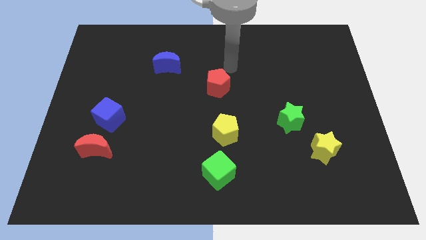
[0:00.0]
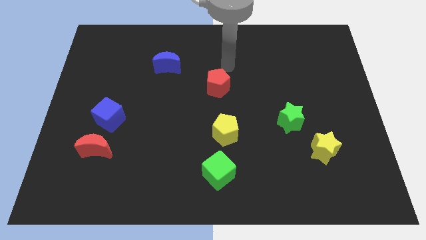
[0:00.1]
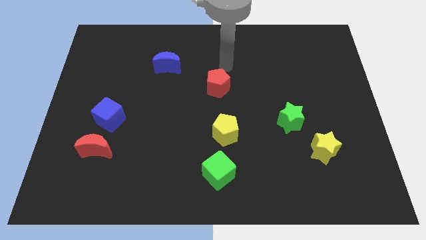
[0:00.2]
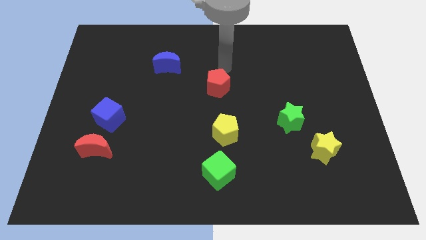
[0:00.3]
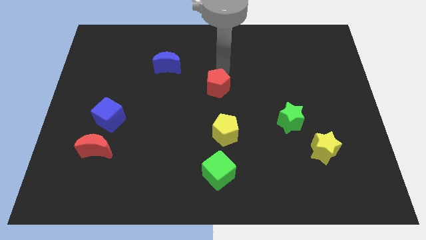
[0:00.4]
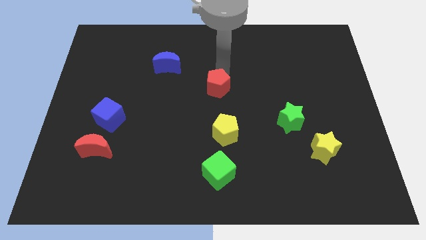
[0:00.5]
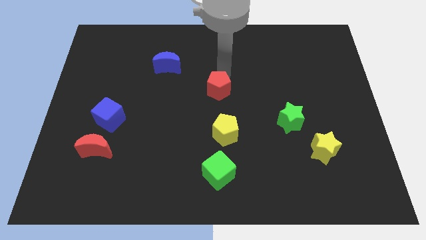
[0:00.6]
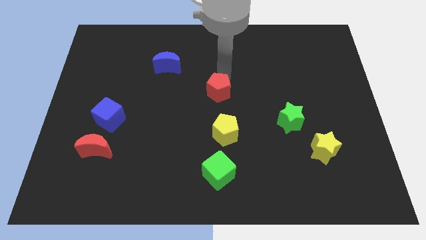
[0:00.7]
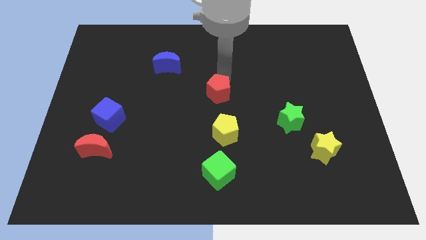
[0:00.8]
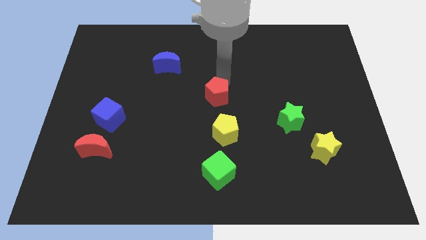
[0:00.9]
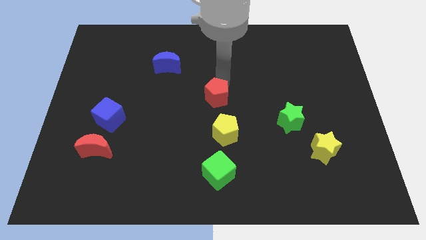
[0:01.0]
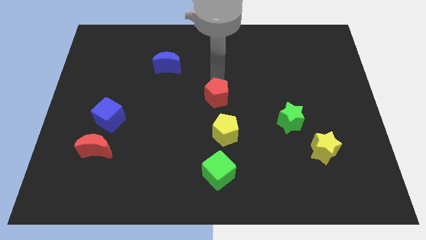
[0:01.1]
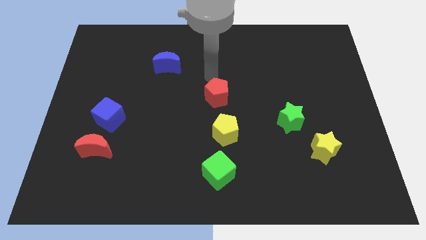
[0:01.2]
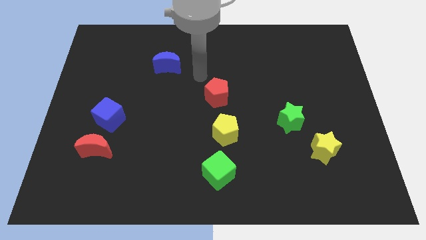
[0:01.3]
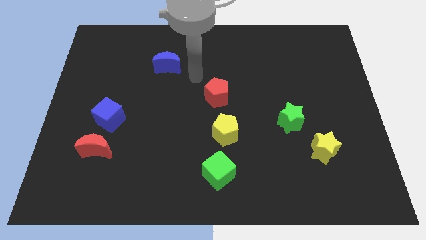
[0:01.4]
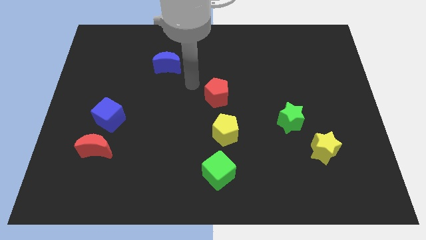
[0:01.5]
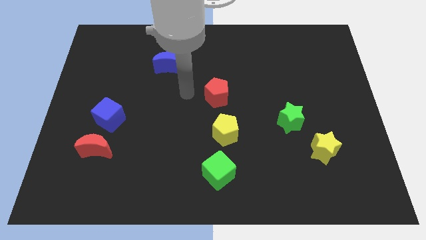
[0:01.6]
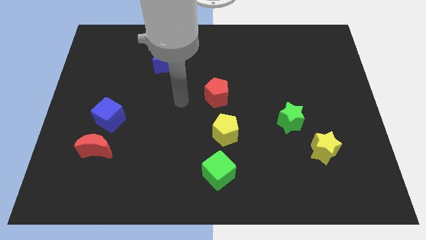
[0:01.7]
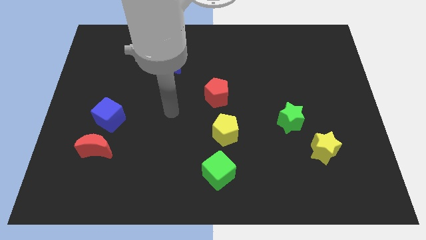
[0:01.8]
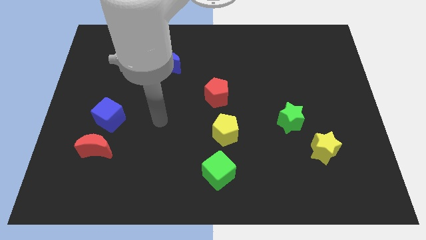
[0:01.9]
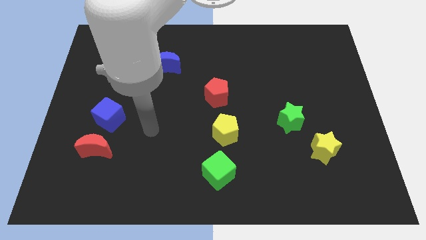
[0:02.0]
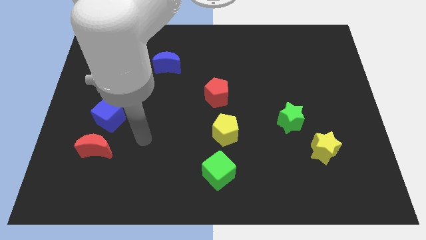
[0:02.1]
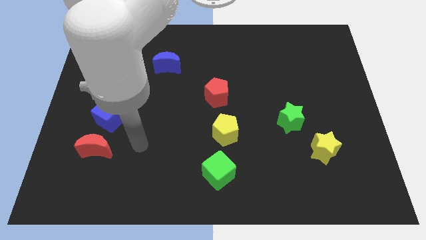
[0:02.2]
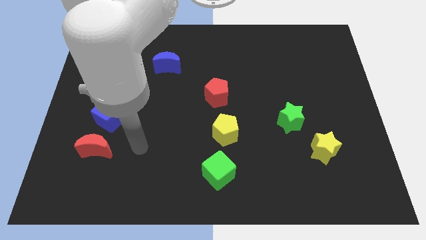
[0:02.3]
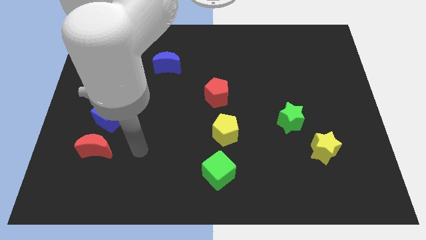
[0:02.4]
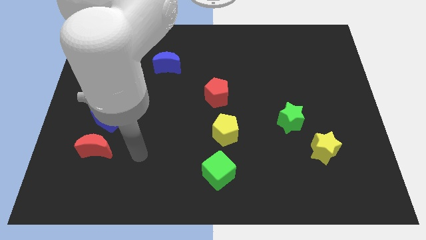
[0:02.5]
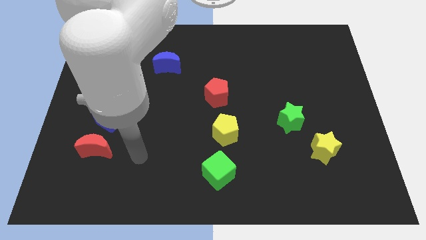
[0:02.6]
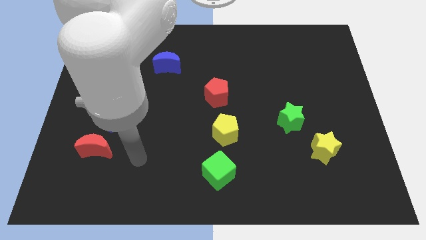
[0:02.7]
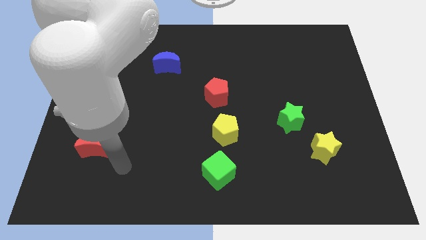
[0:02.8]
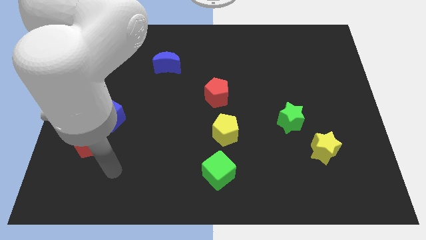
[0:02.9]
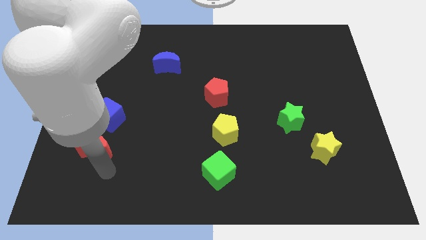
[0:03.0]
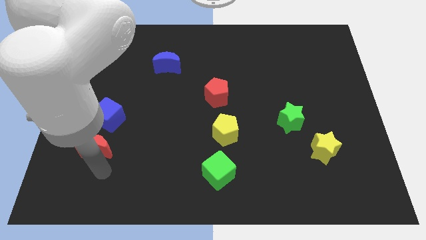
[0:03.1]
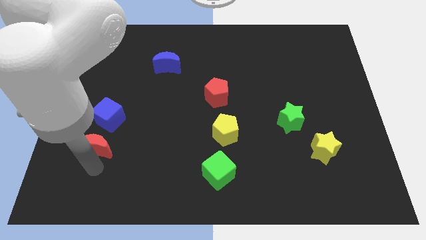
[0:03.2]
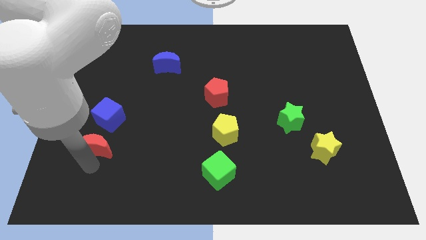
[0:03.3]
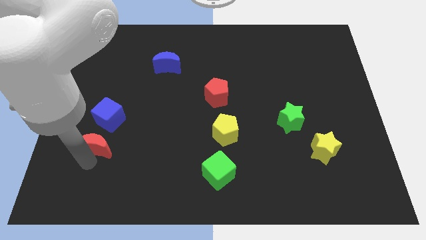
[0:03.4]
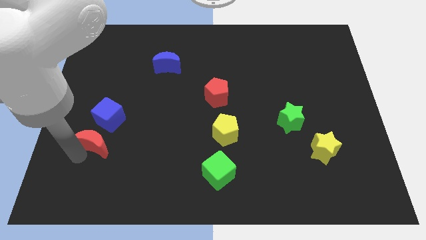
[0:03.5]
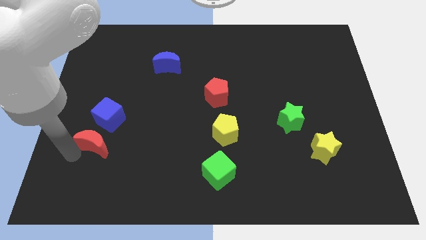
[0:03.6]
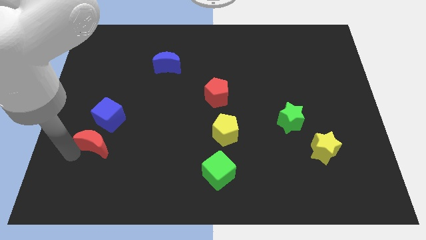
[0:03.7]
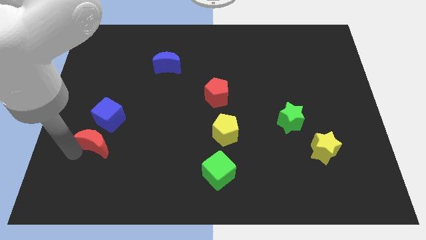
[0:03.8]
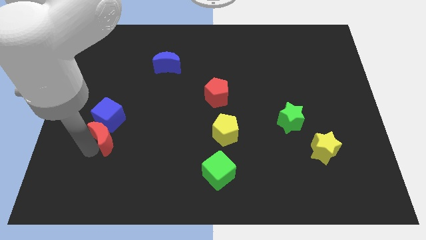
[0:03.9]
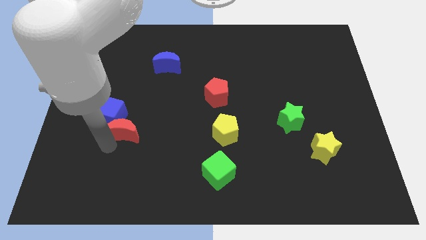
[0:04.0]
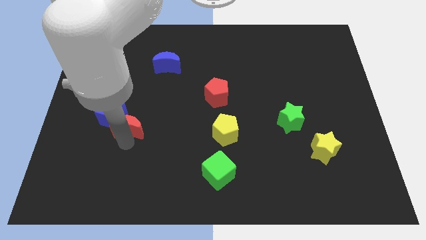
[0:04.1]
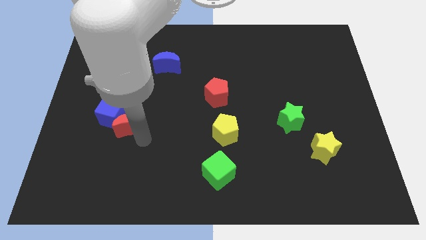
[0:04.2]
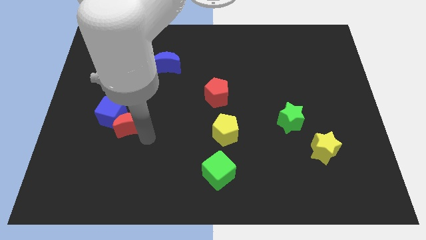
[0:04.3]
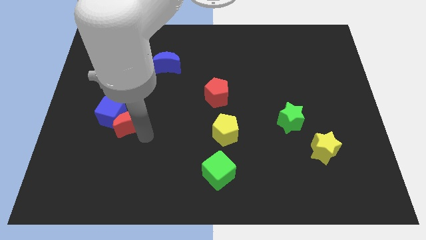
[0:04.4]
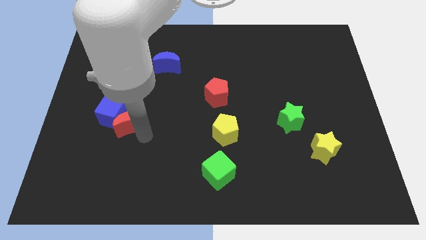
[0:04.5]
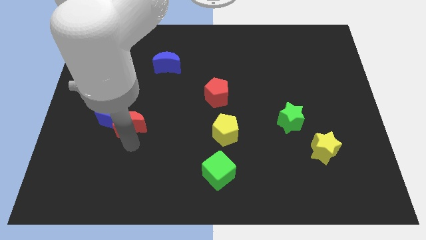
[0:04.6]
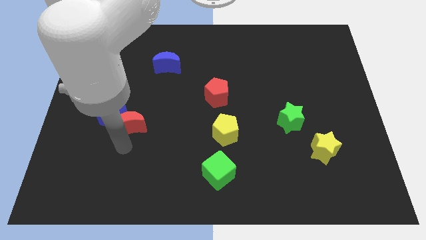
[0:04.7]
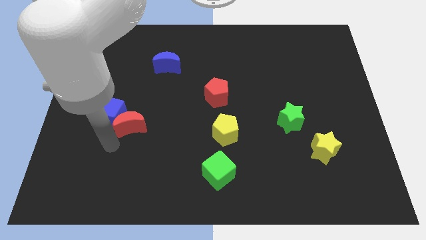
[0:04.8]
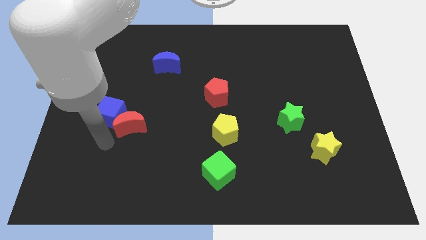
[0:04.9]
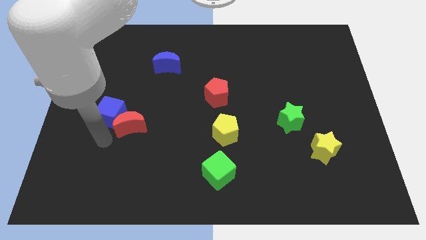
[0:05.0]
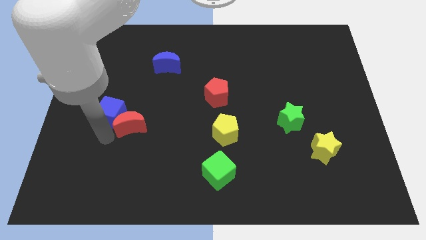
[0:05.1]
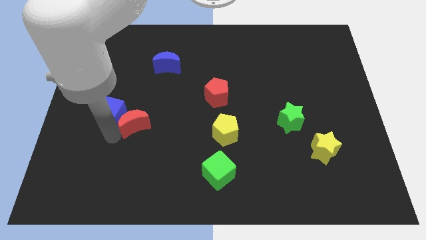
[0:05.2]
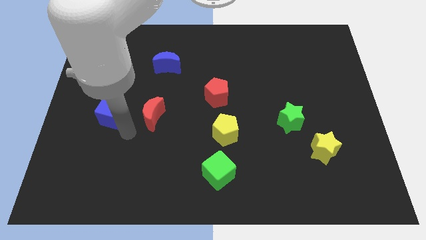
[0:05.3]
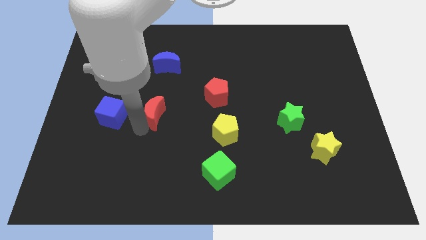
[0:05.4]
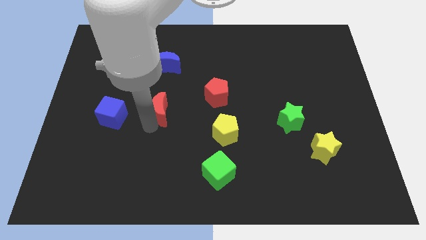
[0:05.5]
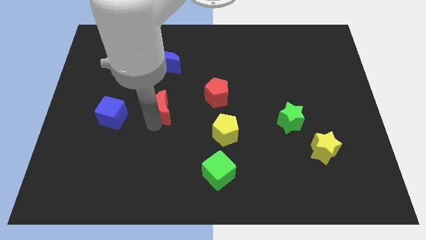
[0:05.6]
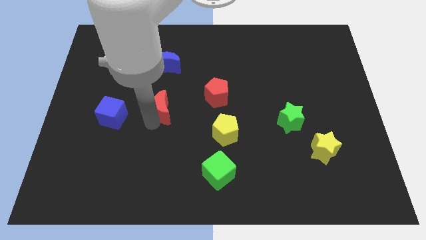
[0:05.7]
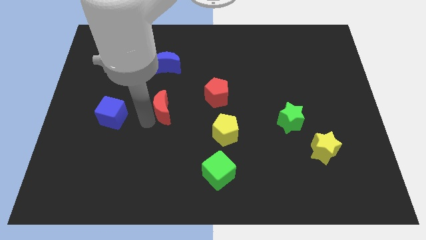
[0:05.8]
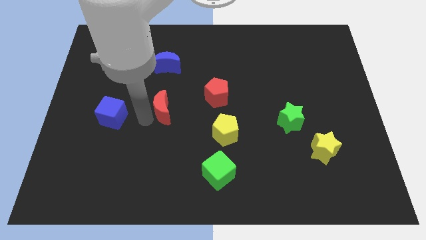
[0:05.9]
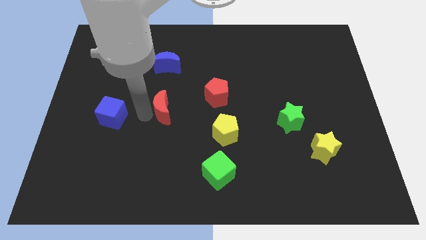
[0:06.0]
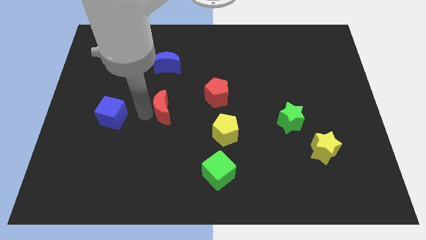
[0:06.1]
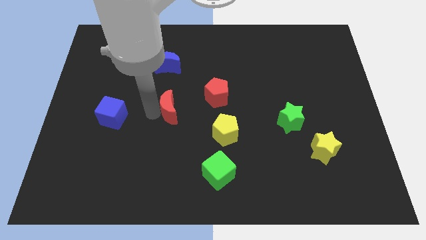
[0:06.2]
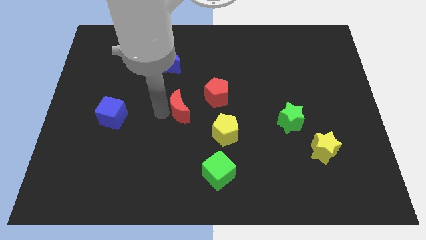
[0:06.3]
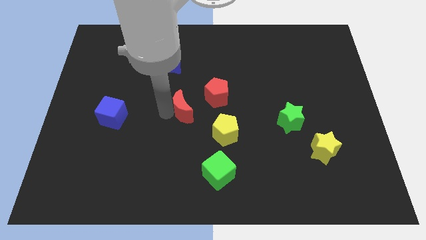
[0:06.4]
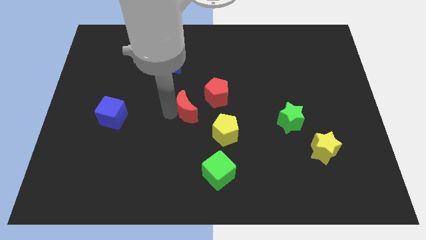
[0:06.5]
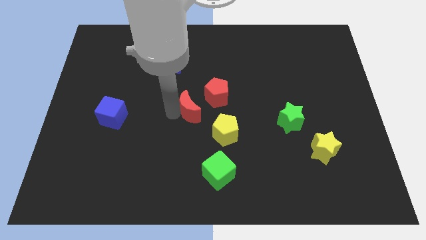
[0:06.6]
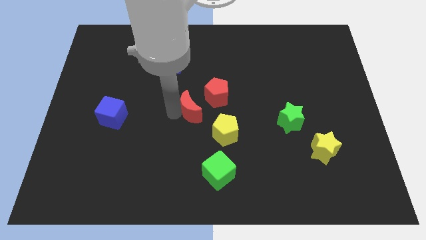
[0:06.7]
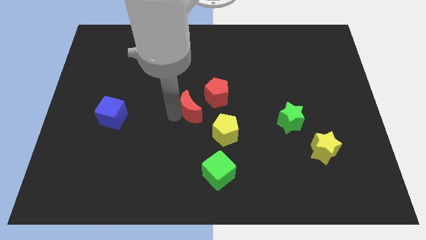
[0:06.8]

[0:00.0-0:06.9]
move the red crescent towards red pentagon

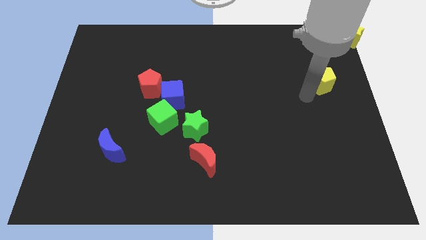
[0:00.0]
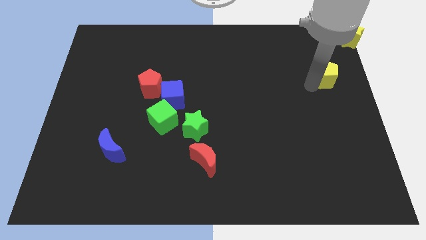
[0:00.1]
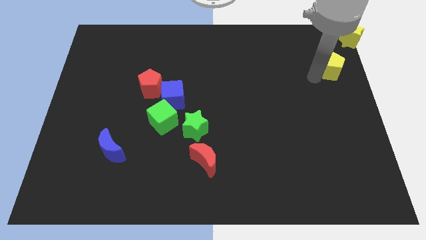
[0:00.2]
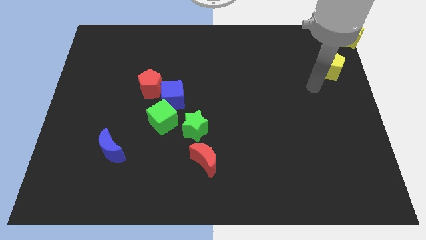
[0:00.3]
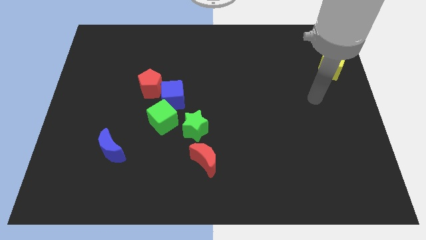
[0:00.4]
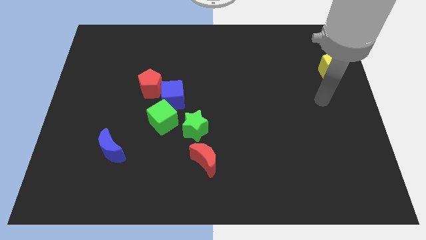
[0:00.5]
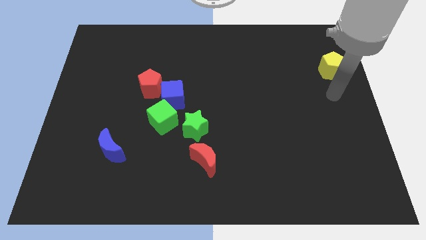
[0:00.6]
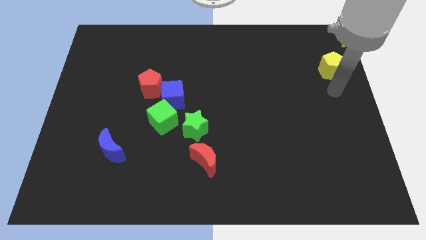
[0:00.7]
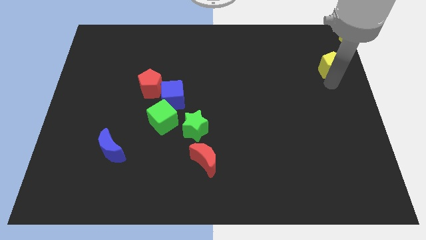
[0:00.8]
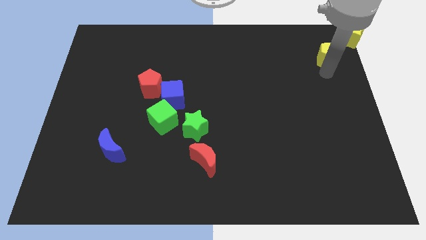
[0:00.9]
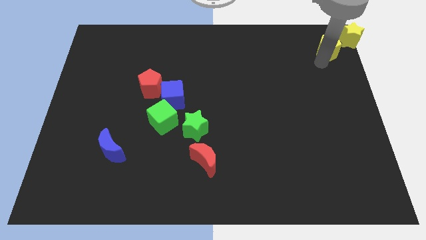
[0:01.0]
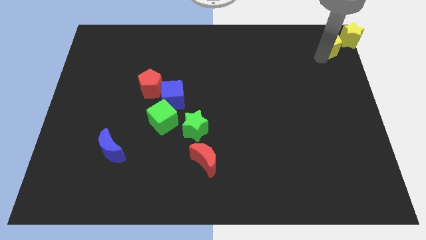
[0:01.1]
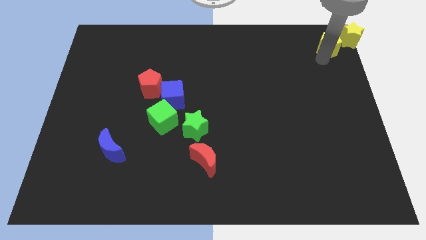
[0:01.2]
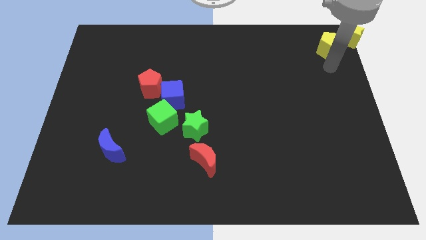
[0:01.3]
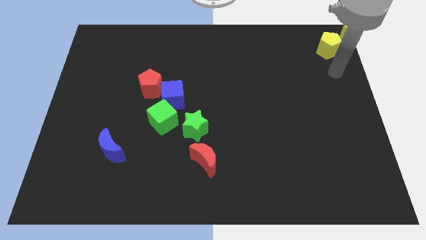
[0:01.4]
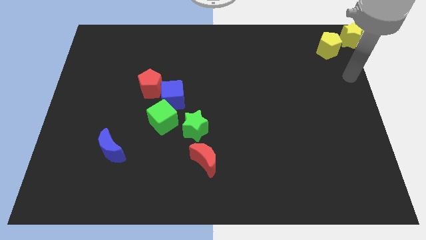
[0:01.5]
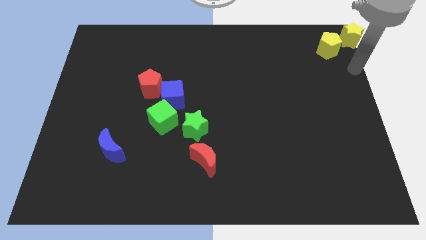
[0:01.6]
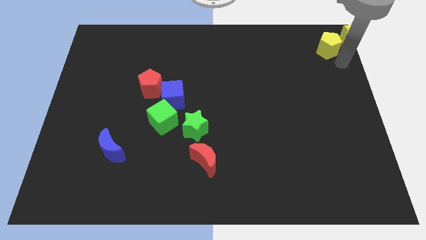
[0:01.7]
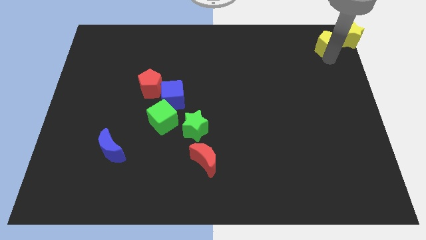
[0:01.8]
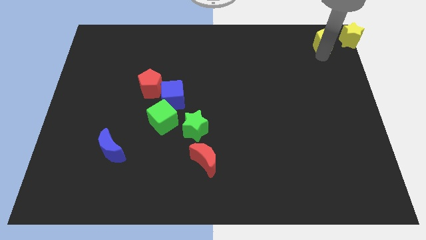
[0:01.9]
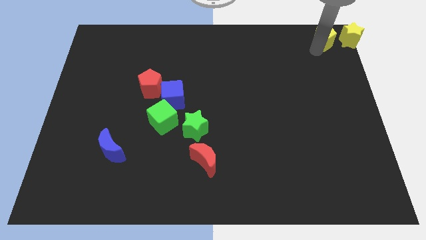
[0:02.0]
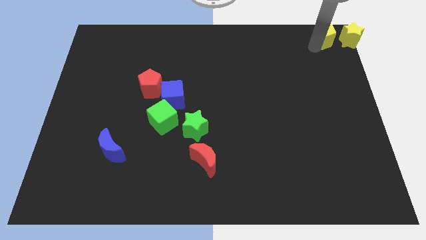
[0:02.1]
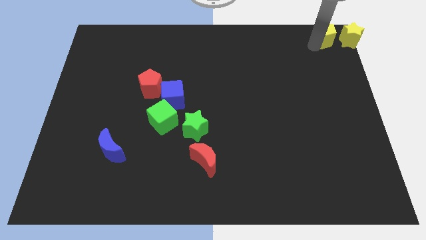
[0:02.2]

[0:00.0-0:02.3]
push the yellow pentagon to the left of the yellow star
